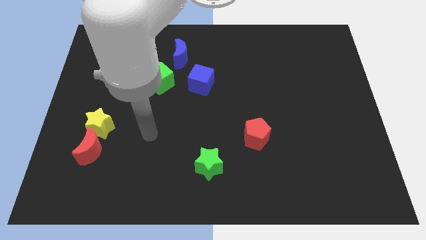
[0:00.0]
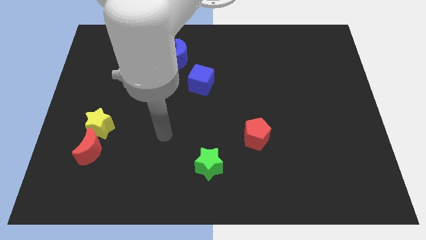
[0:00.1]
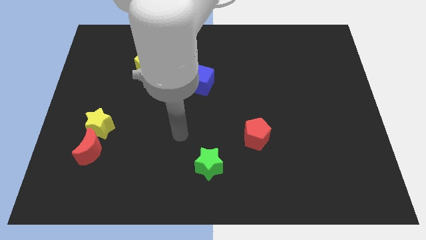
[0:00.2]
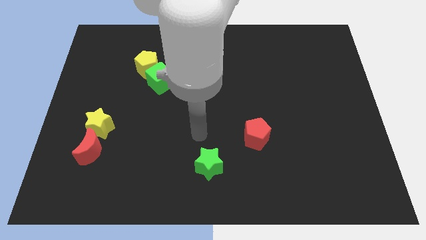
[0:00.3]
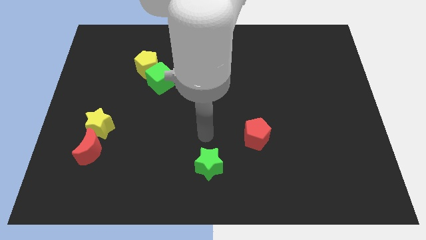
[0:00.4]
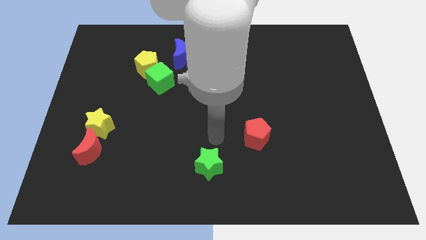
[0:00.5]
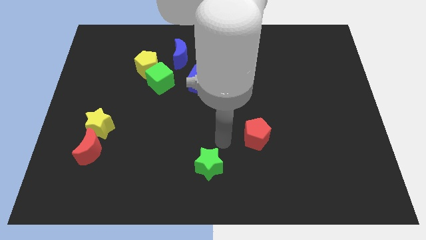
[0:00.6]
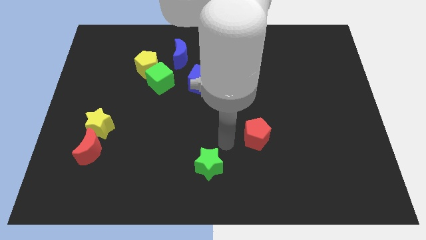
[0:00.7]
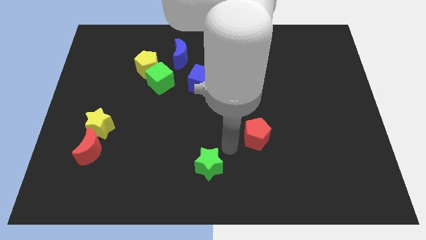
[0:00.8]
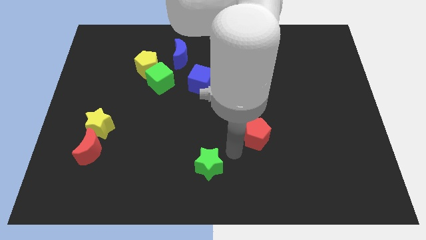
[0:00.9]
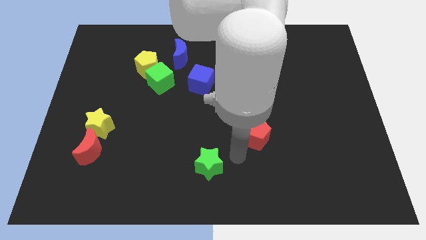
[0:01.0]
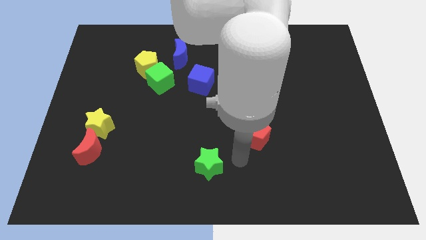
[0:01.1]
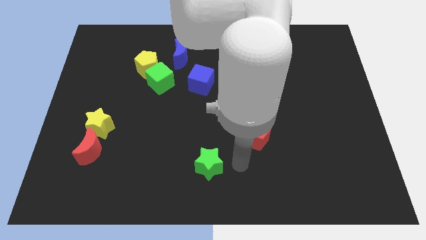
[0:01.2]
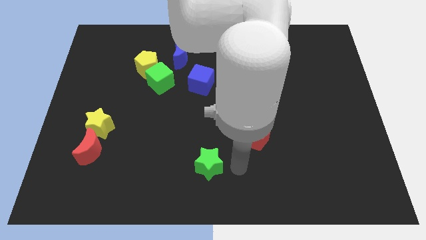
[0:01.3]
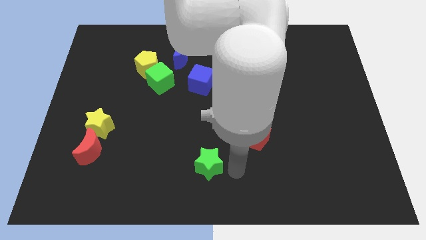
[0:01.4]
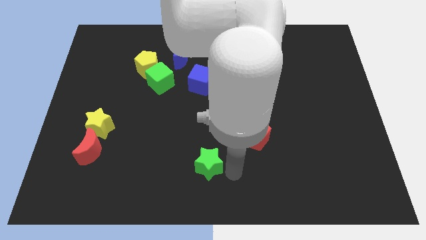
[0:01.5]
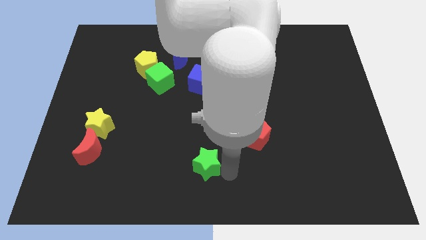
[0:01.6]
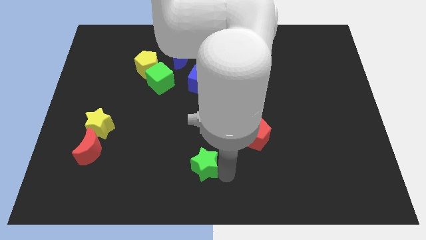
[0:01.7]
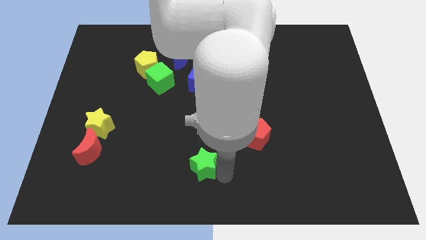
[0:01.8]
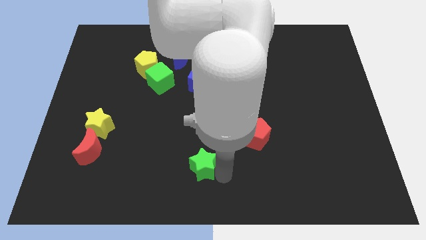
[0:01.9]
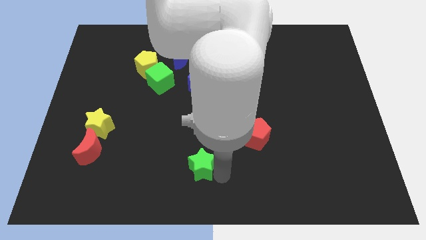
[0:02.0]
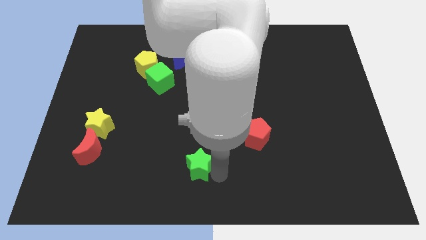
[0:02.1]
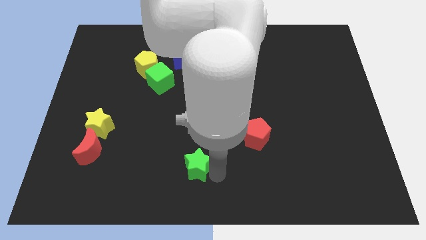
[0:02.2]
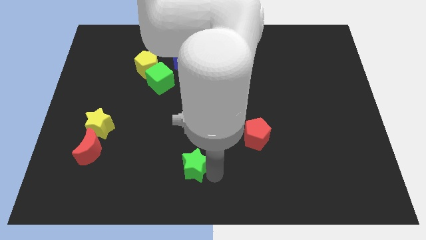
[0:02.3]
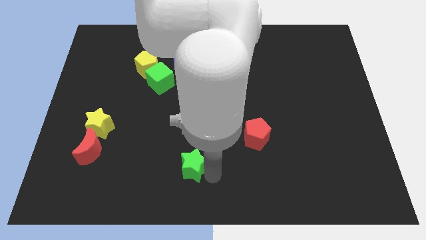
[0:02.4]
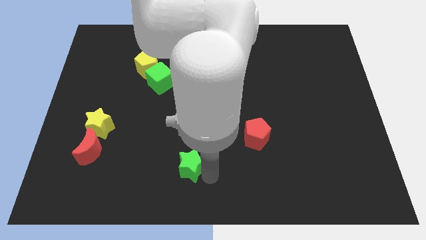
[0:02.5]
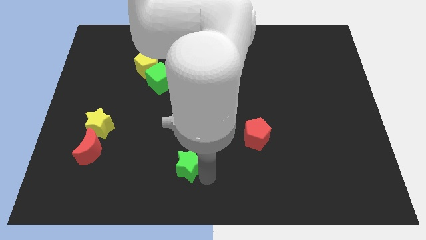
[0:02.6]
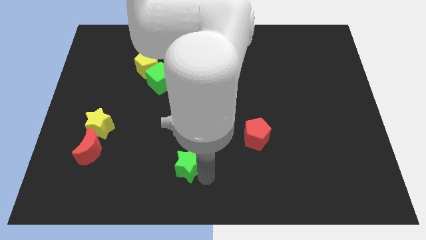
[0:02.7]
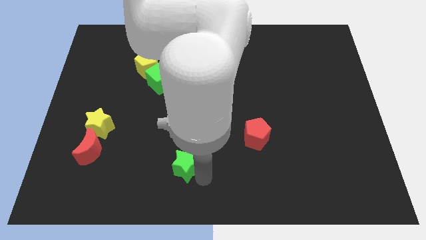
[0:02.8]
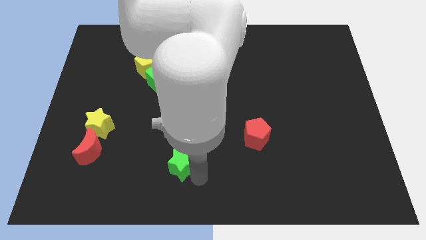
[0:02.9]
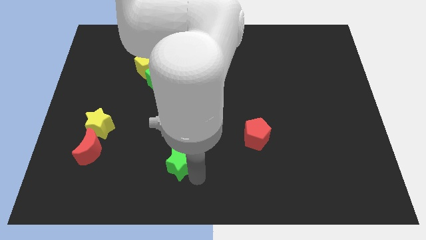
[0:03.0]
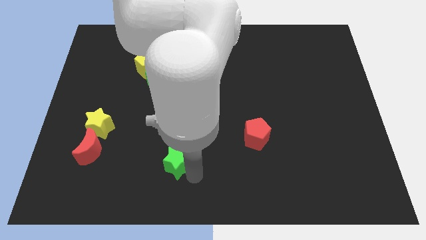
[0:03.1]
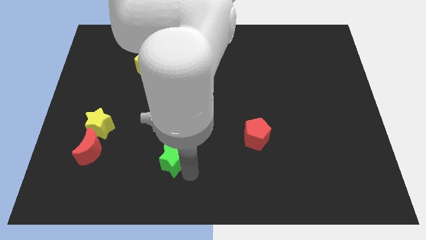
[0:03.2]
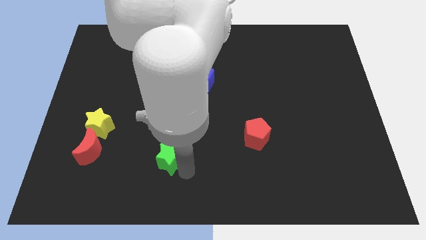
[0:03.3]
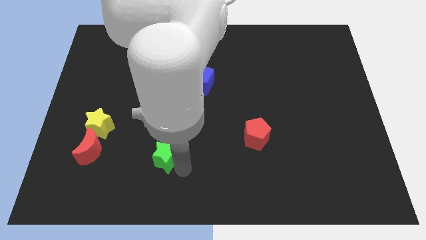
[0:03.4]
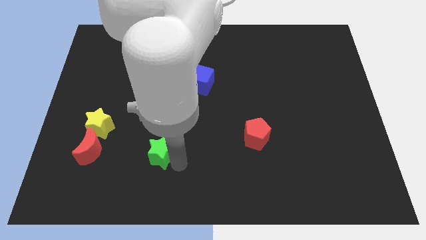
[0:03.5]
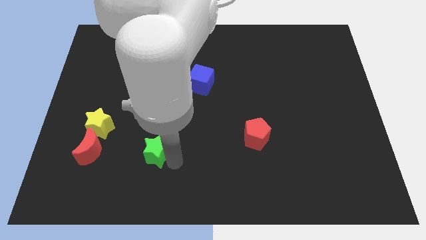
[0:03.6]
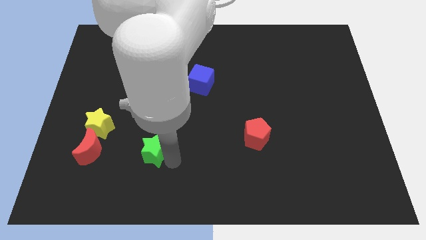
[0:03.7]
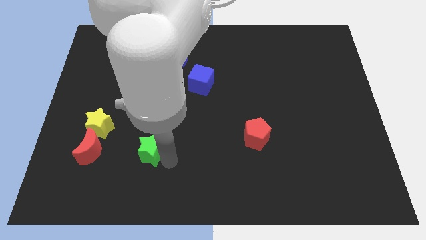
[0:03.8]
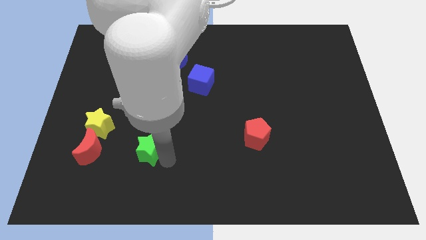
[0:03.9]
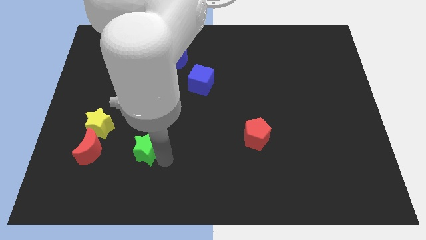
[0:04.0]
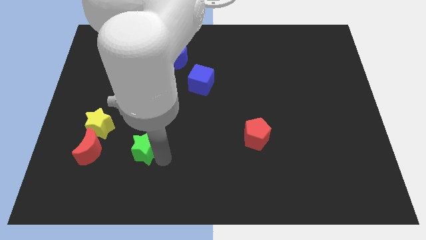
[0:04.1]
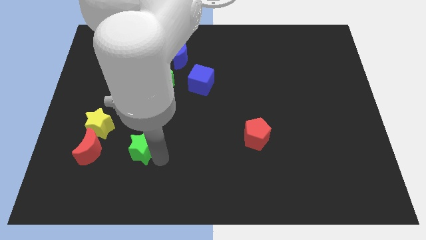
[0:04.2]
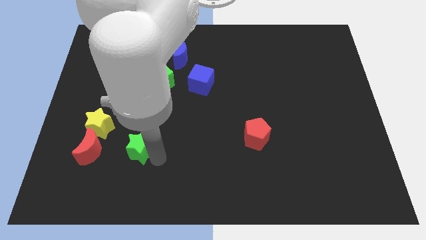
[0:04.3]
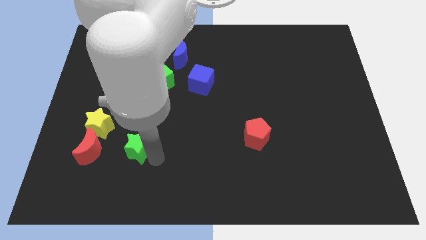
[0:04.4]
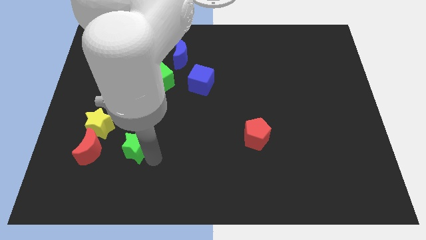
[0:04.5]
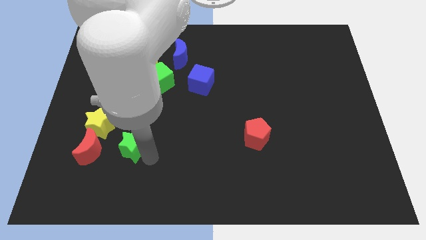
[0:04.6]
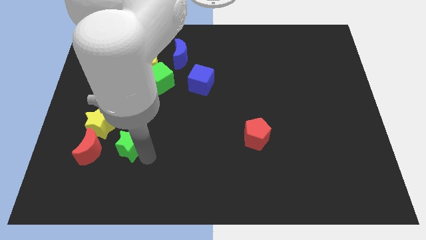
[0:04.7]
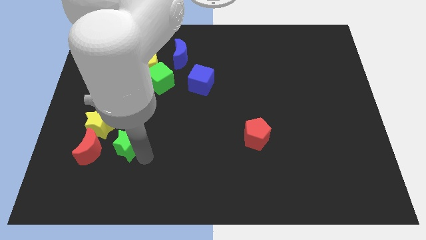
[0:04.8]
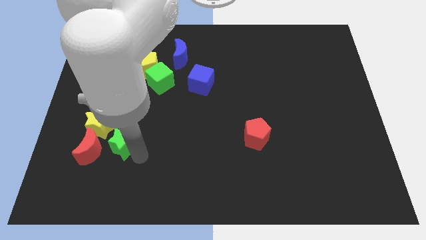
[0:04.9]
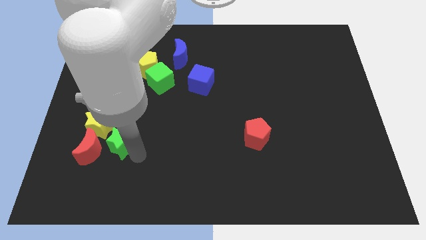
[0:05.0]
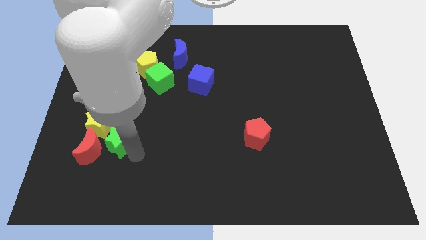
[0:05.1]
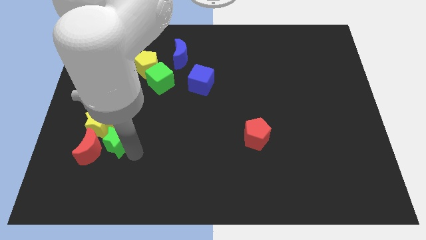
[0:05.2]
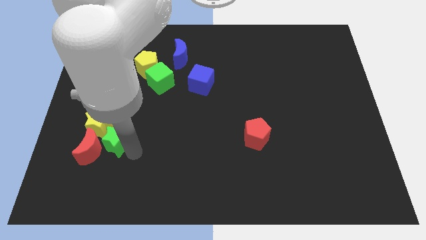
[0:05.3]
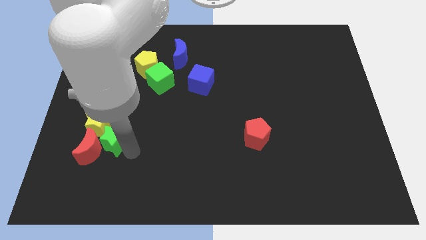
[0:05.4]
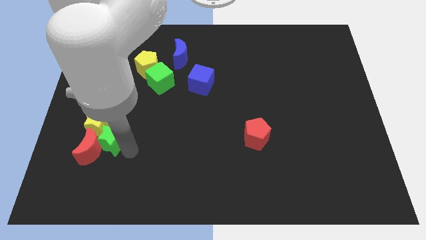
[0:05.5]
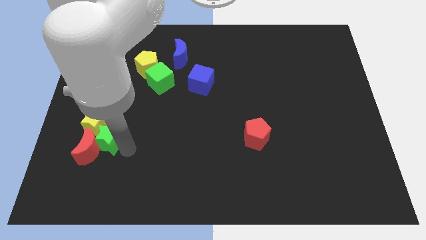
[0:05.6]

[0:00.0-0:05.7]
put the green star towards the yellow star

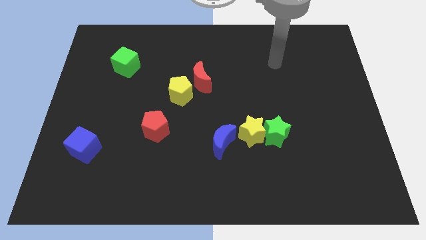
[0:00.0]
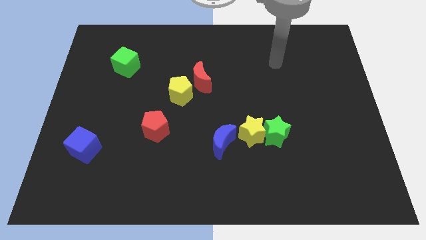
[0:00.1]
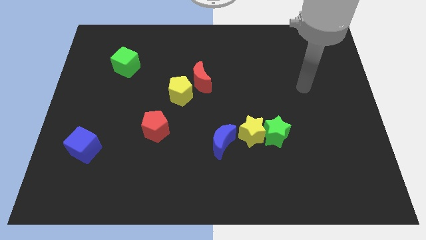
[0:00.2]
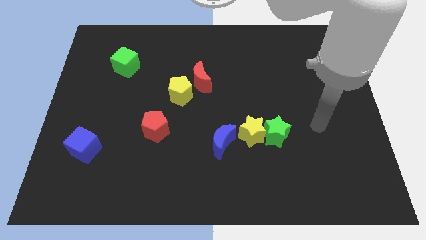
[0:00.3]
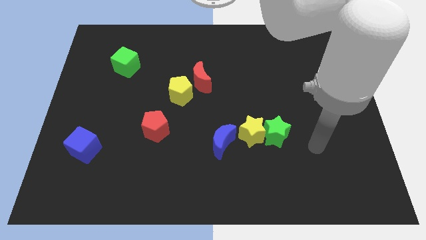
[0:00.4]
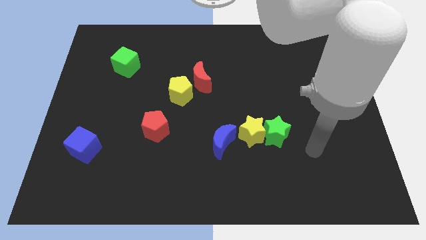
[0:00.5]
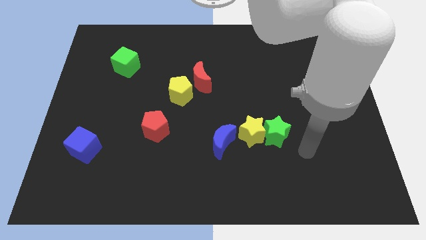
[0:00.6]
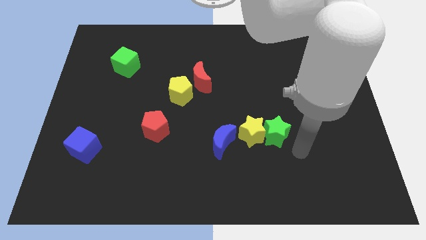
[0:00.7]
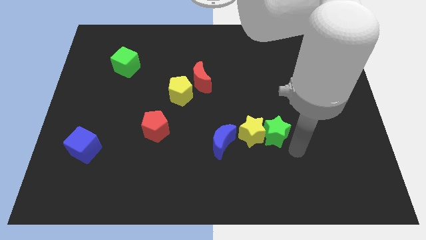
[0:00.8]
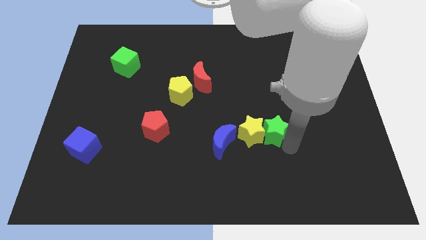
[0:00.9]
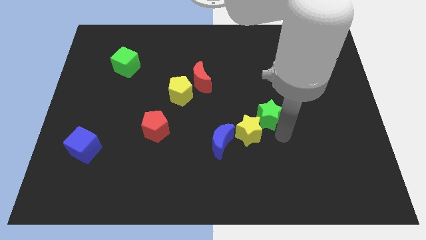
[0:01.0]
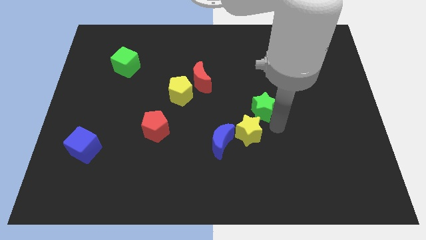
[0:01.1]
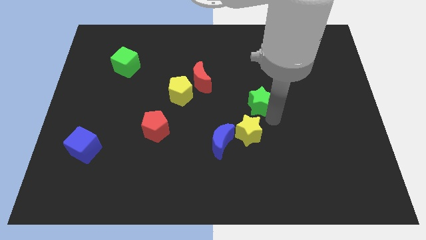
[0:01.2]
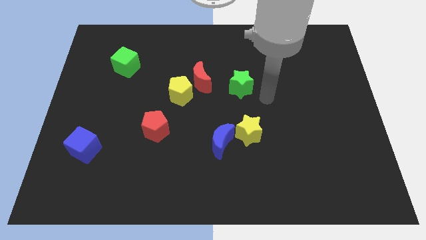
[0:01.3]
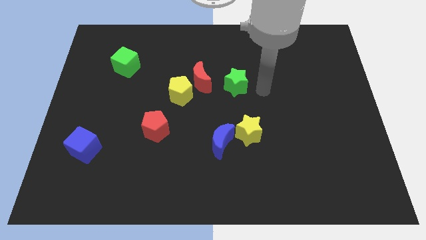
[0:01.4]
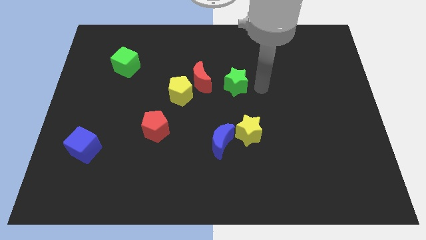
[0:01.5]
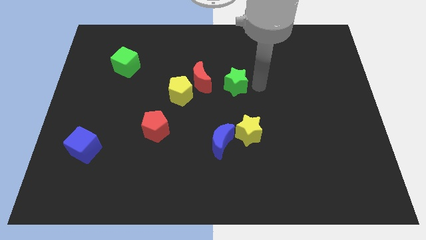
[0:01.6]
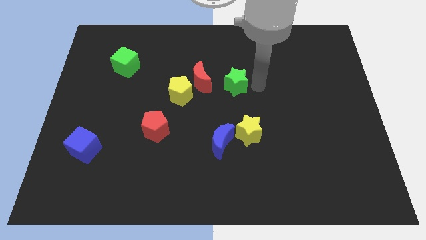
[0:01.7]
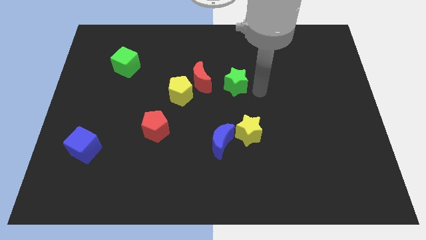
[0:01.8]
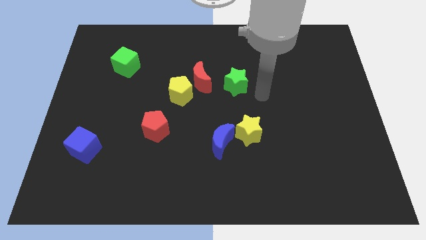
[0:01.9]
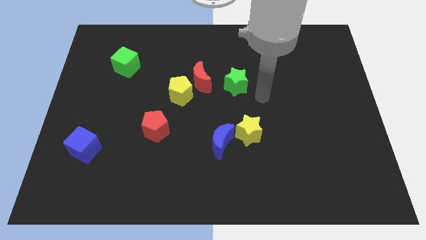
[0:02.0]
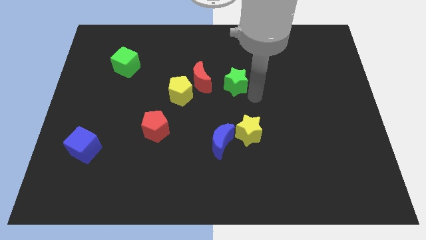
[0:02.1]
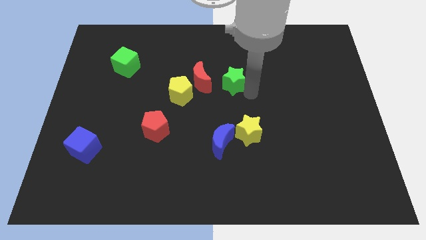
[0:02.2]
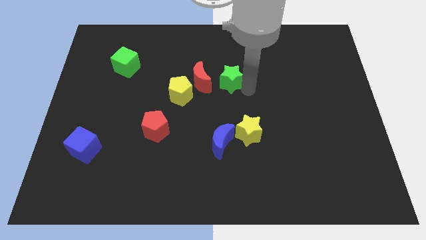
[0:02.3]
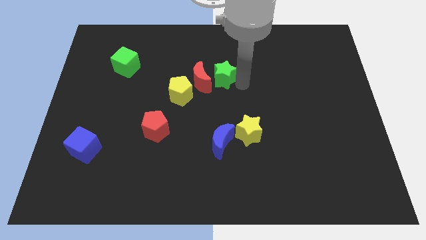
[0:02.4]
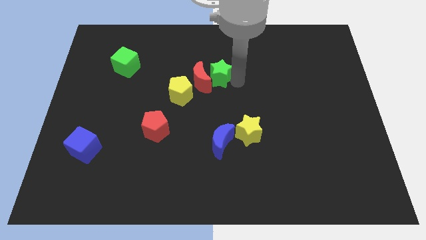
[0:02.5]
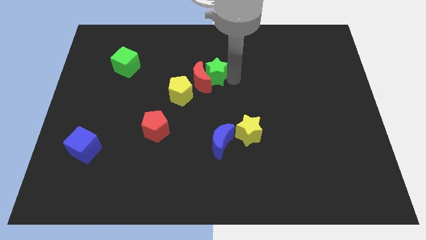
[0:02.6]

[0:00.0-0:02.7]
push the green star close to the red moon
